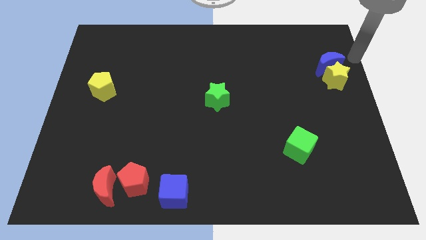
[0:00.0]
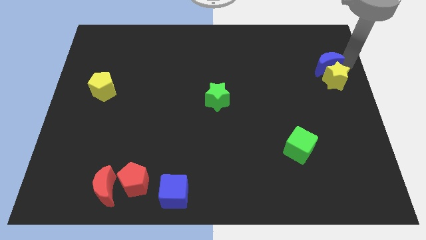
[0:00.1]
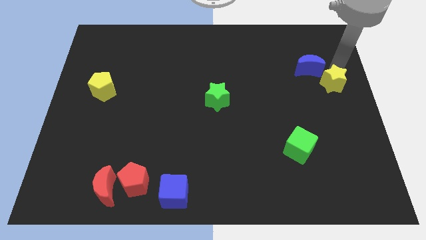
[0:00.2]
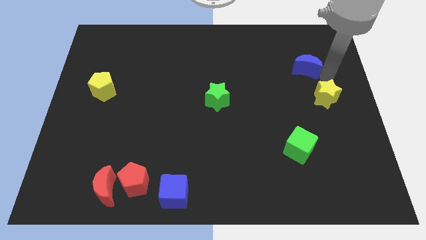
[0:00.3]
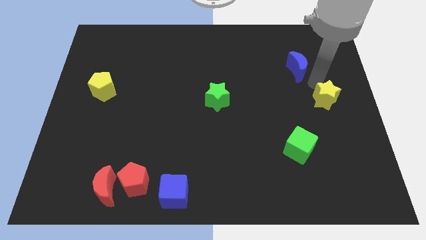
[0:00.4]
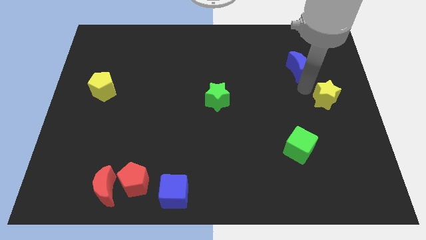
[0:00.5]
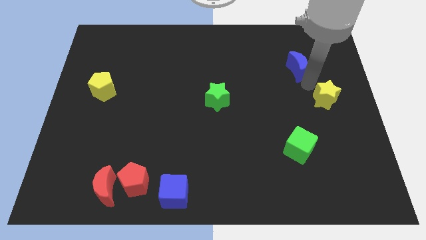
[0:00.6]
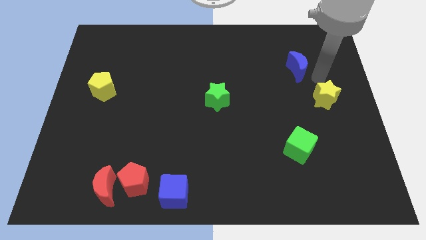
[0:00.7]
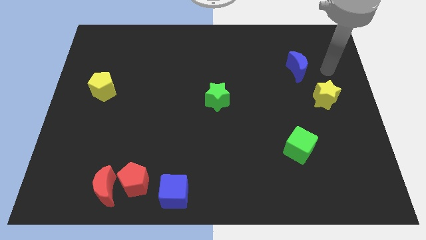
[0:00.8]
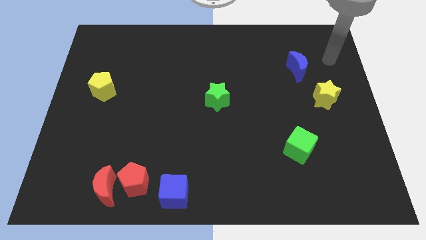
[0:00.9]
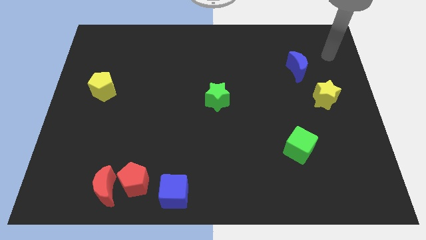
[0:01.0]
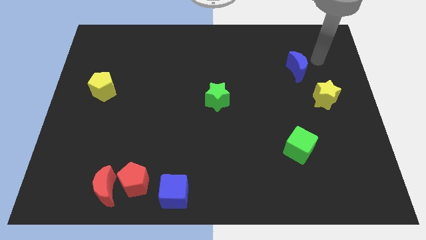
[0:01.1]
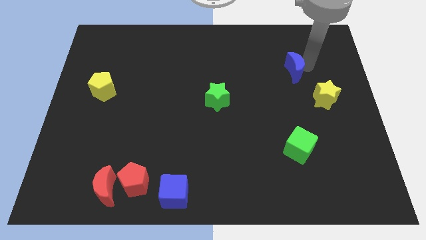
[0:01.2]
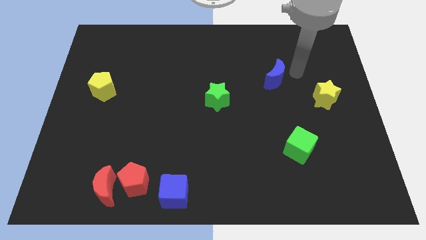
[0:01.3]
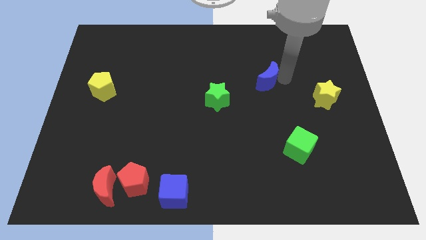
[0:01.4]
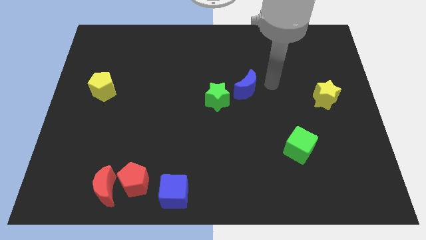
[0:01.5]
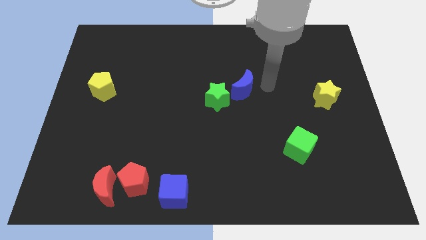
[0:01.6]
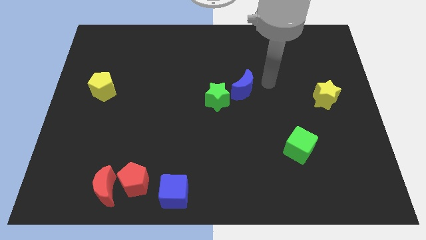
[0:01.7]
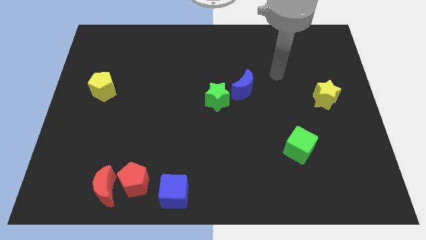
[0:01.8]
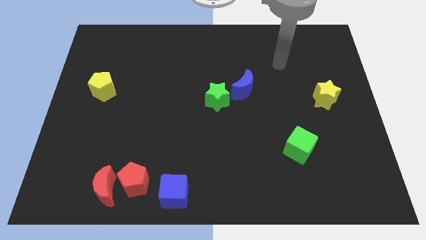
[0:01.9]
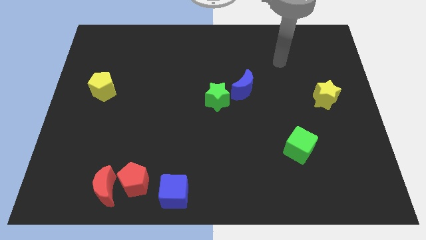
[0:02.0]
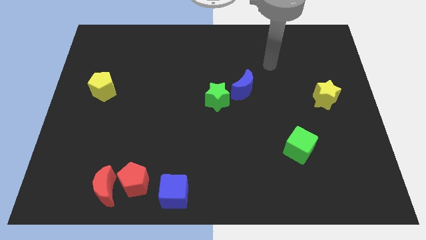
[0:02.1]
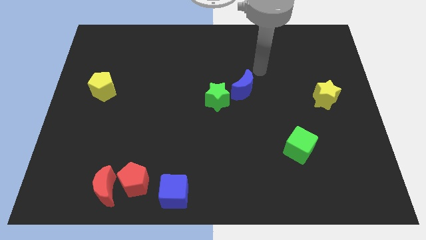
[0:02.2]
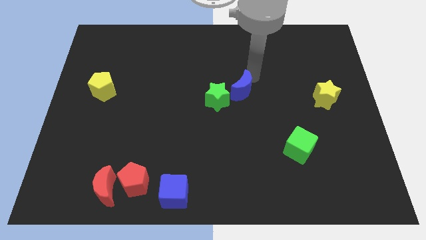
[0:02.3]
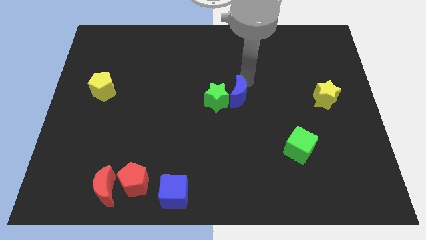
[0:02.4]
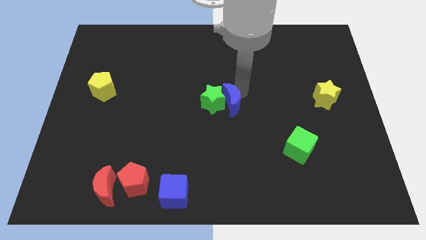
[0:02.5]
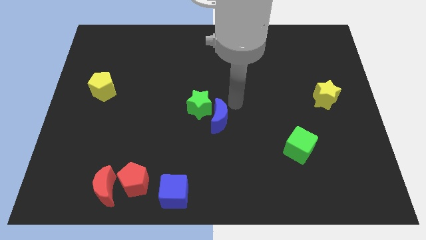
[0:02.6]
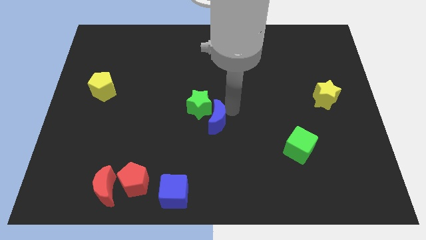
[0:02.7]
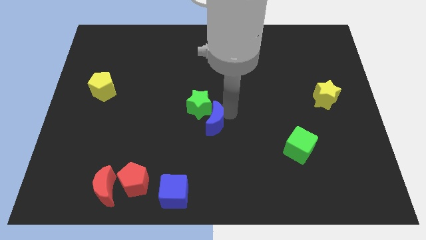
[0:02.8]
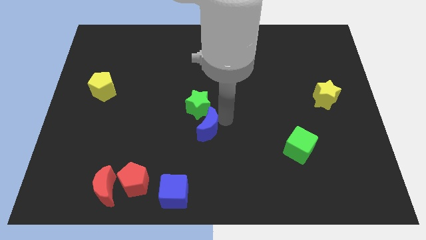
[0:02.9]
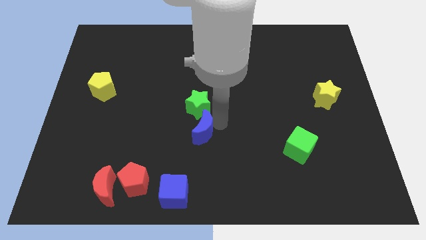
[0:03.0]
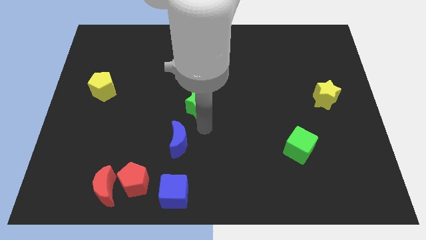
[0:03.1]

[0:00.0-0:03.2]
push the blue moon to the bottom side of the green star

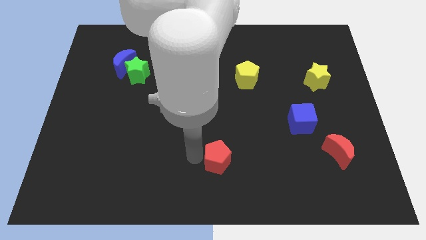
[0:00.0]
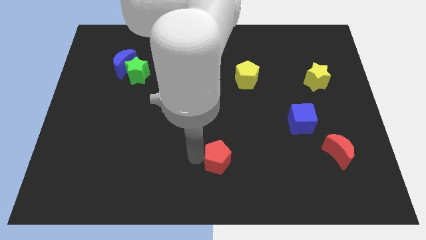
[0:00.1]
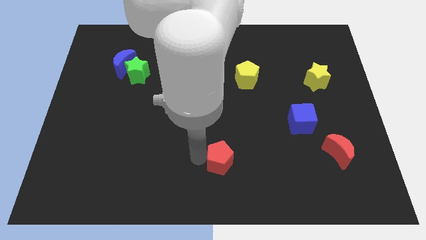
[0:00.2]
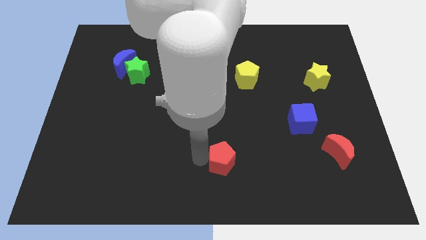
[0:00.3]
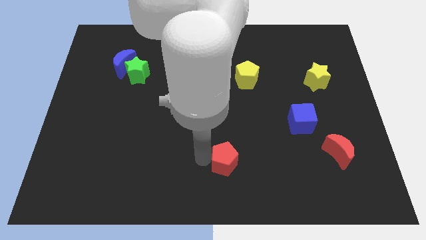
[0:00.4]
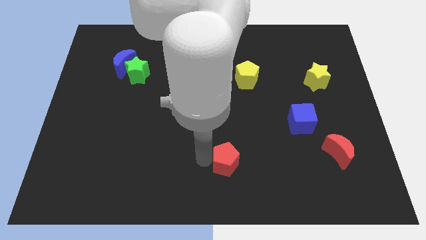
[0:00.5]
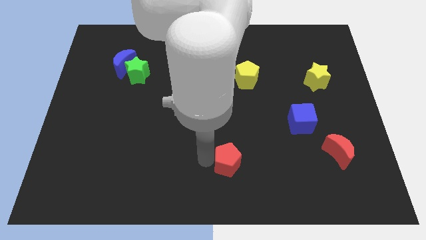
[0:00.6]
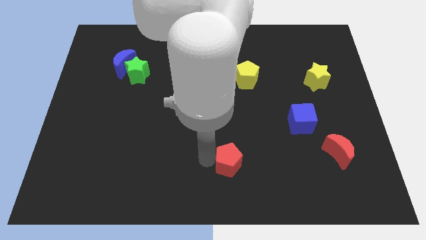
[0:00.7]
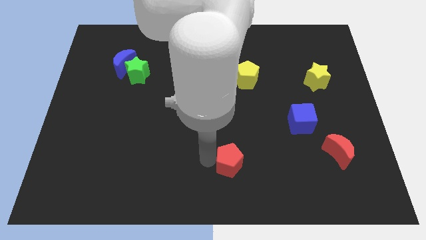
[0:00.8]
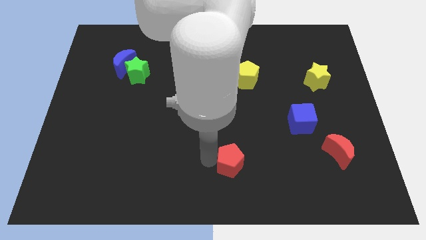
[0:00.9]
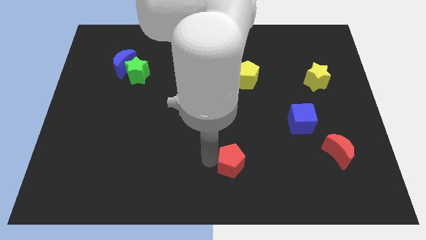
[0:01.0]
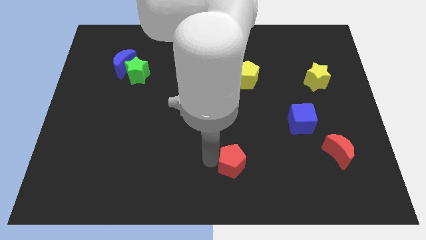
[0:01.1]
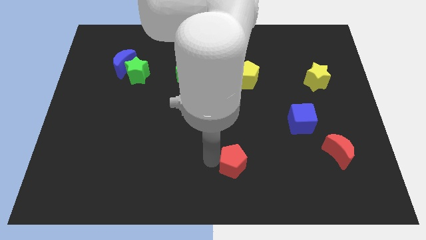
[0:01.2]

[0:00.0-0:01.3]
move the red pentagon towards the bottom right side of the board

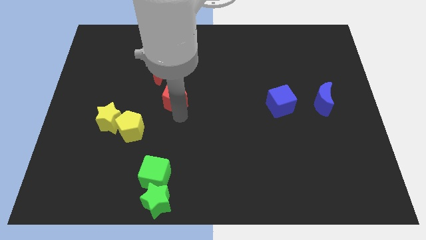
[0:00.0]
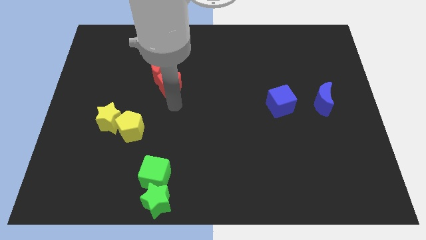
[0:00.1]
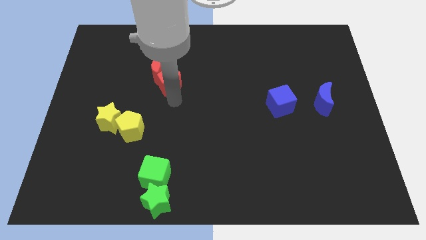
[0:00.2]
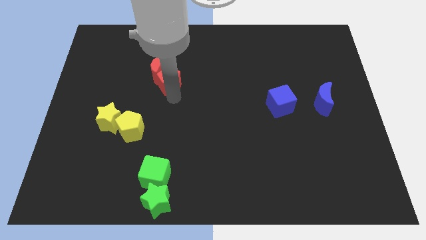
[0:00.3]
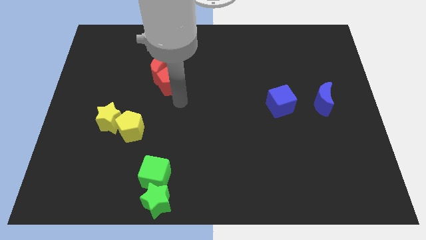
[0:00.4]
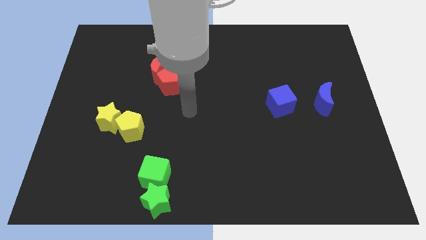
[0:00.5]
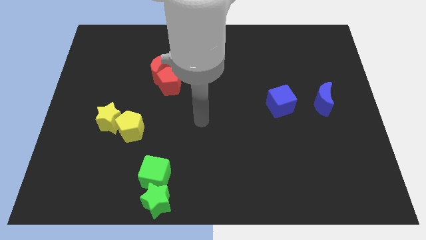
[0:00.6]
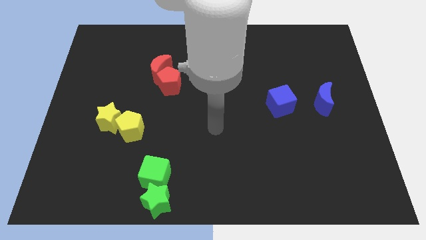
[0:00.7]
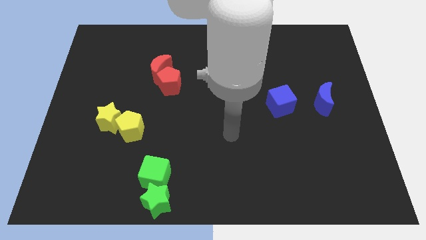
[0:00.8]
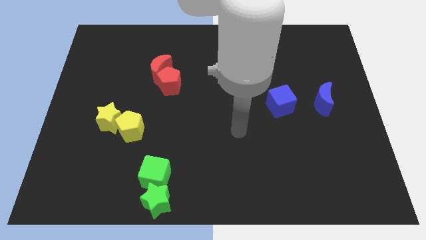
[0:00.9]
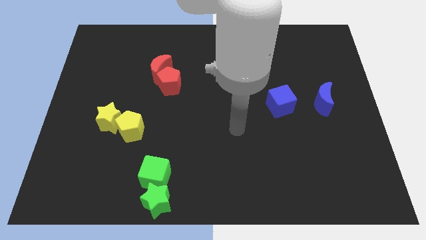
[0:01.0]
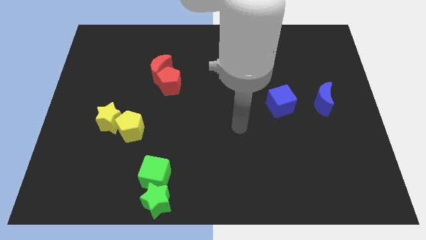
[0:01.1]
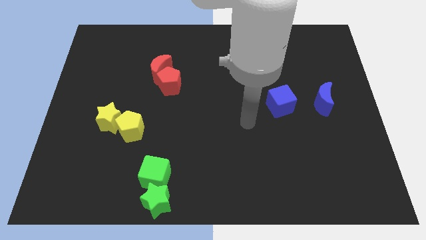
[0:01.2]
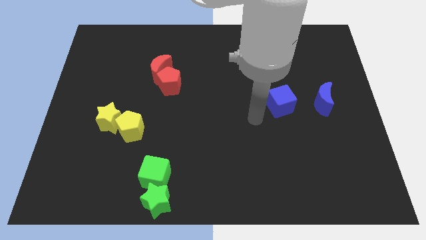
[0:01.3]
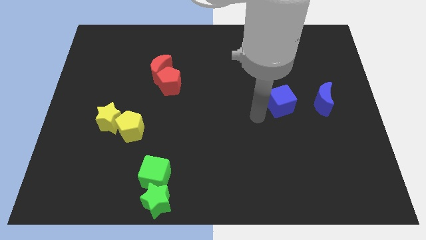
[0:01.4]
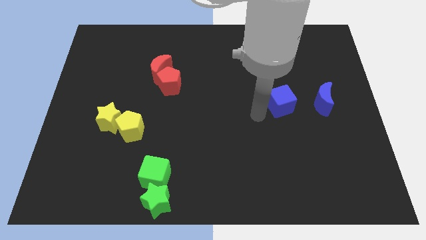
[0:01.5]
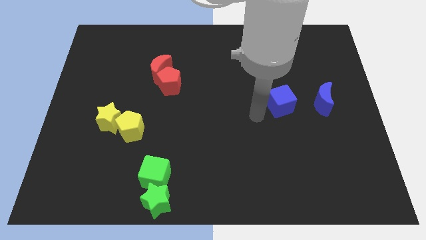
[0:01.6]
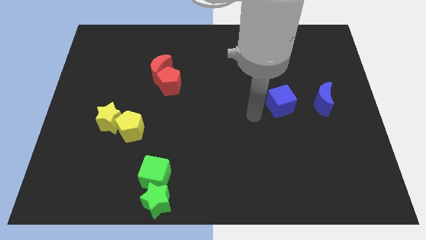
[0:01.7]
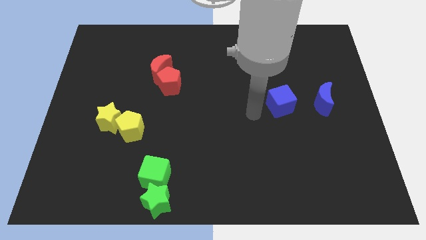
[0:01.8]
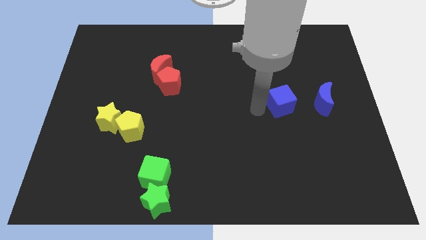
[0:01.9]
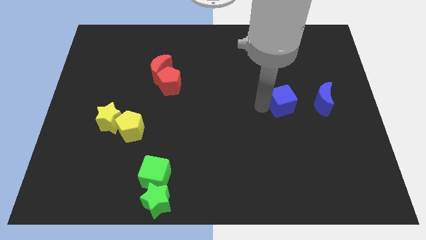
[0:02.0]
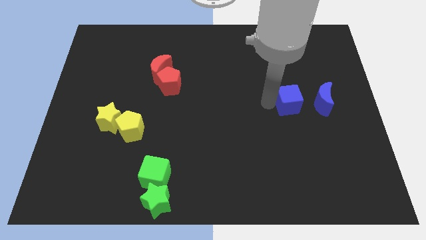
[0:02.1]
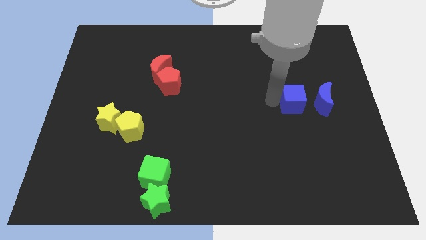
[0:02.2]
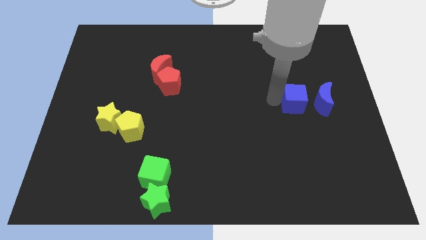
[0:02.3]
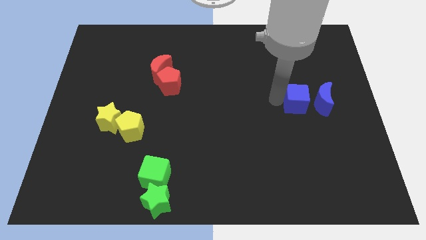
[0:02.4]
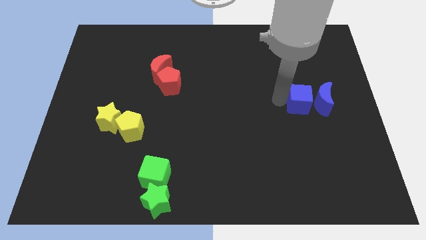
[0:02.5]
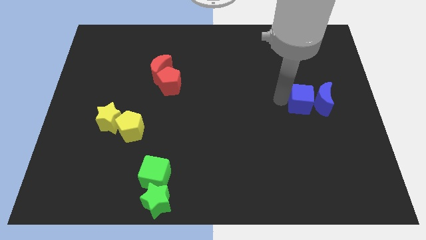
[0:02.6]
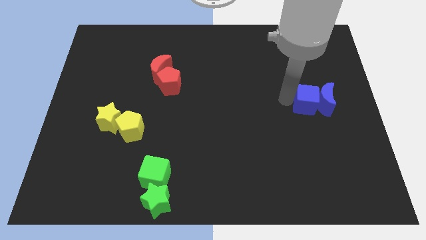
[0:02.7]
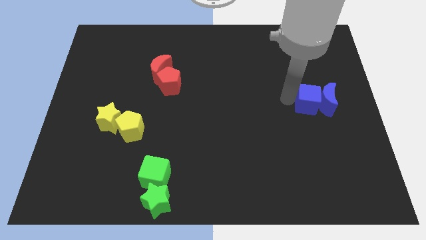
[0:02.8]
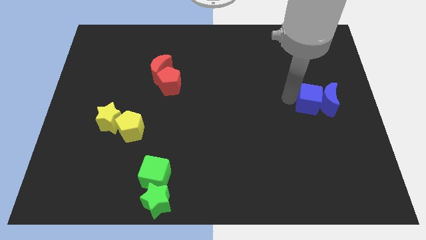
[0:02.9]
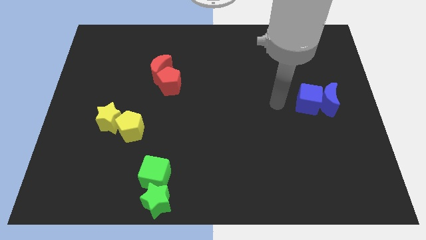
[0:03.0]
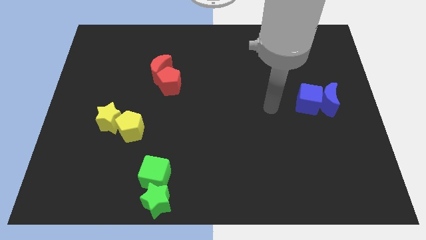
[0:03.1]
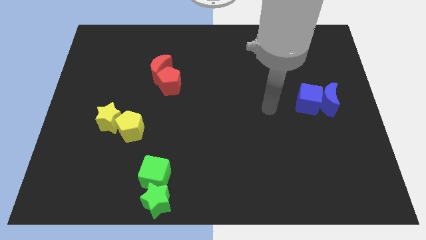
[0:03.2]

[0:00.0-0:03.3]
move the blue cube into the blue moon

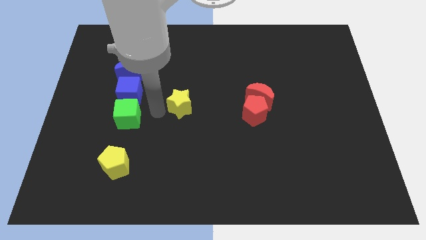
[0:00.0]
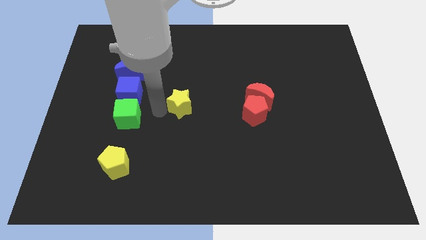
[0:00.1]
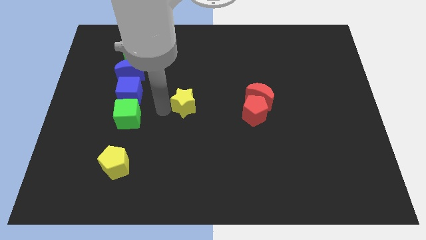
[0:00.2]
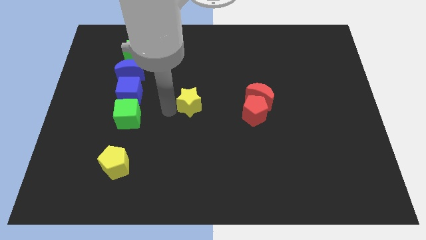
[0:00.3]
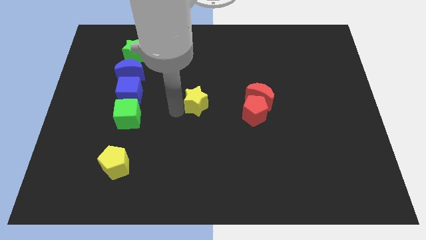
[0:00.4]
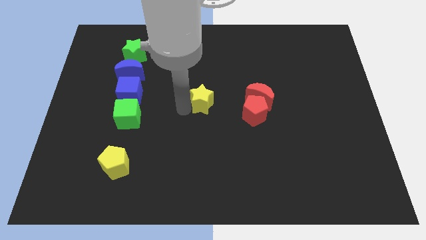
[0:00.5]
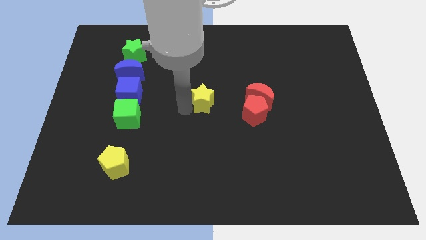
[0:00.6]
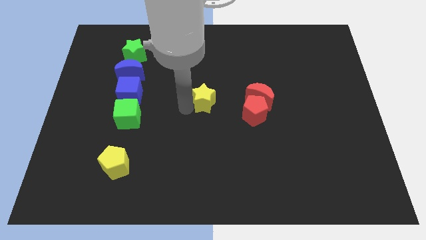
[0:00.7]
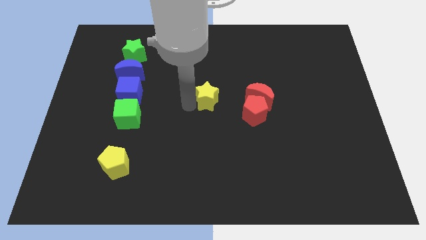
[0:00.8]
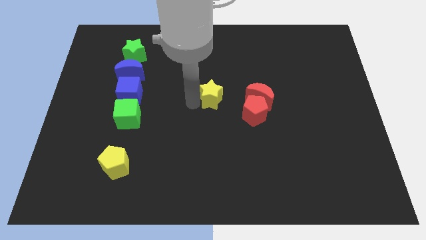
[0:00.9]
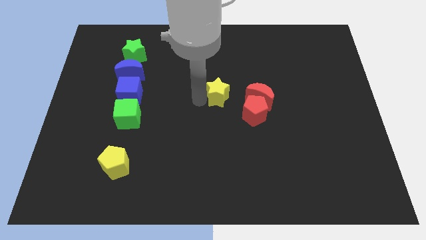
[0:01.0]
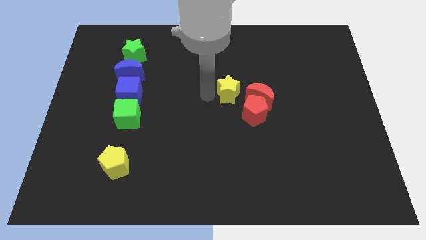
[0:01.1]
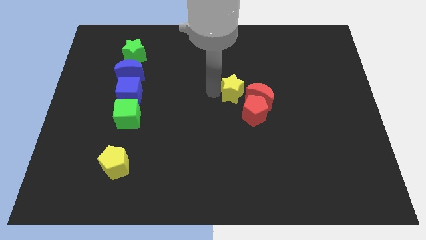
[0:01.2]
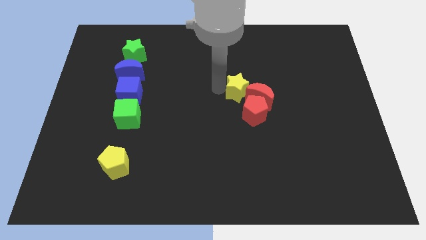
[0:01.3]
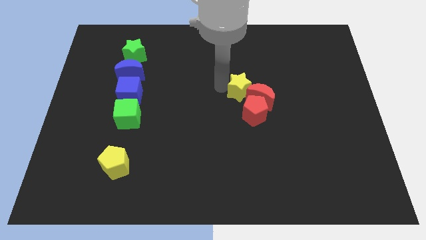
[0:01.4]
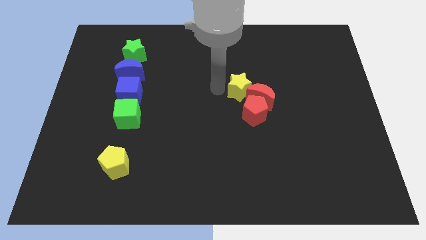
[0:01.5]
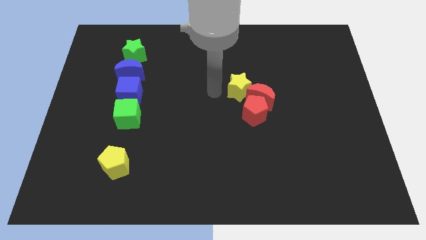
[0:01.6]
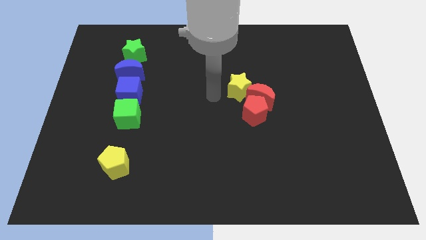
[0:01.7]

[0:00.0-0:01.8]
push the yellow star into the red crescent
